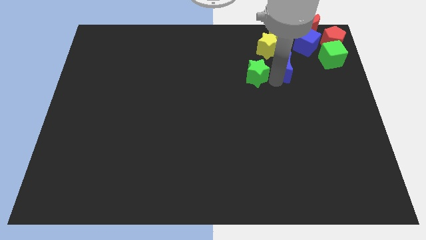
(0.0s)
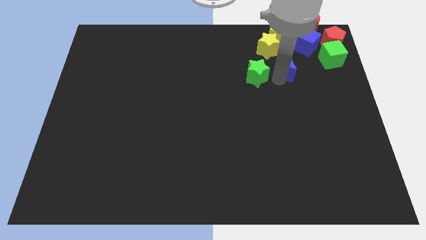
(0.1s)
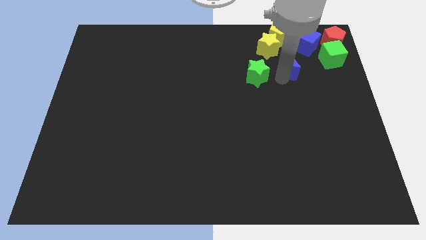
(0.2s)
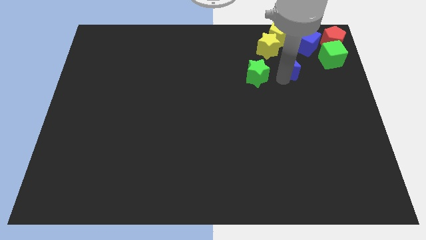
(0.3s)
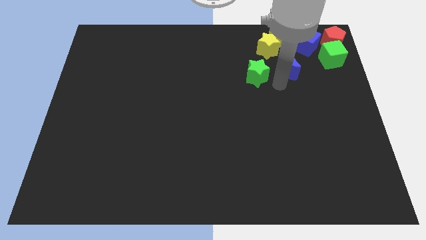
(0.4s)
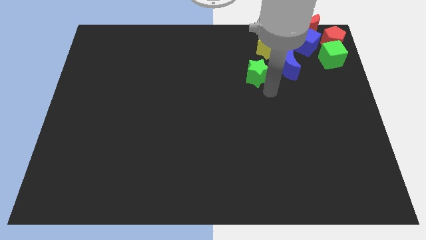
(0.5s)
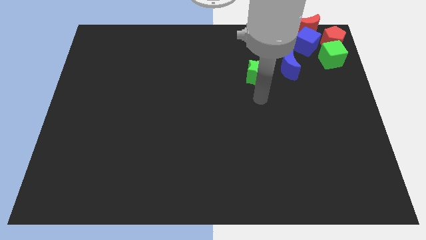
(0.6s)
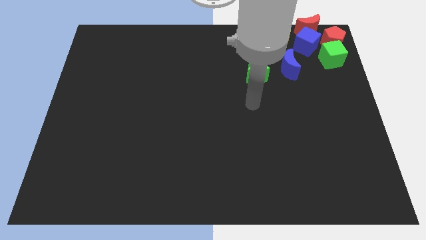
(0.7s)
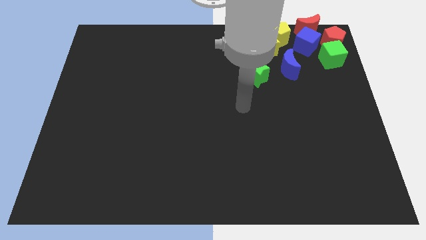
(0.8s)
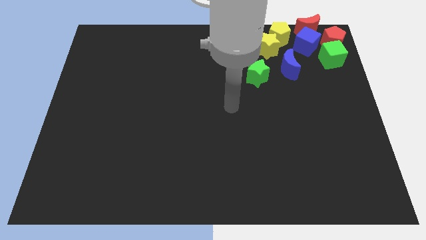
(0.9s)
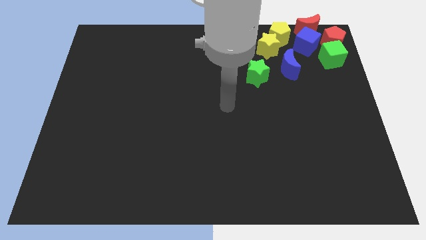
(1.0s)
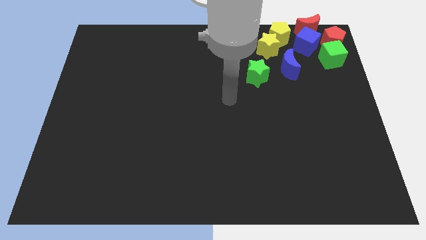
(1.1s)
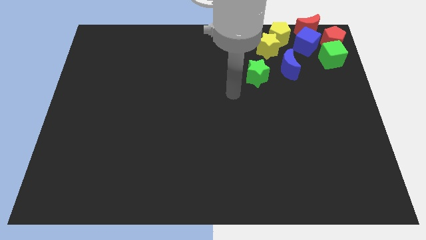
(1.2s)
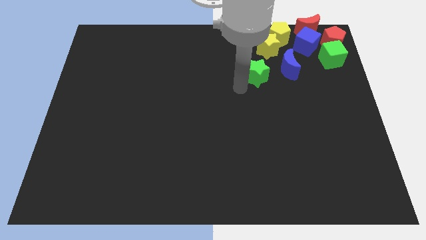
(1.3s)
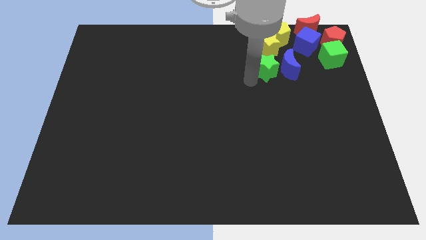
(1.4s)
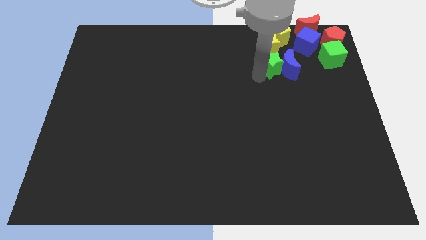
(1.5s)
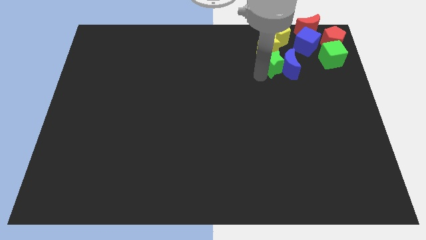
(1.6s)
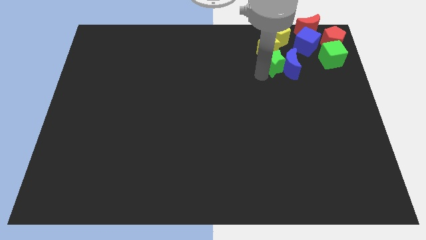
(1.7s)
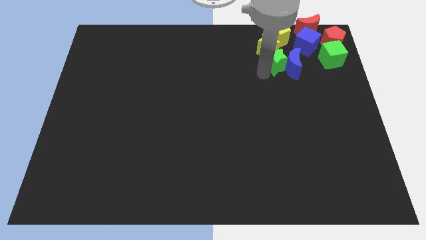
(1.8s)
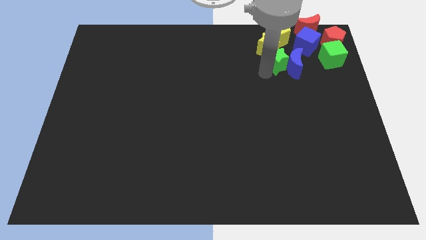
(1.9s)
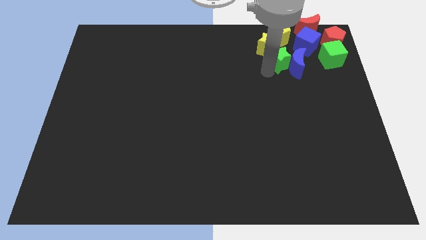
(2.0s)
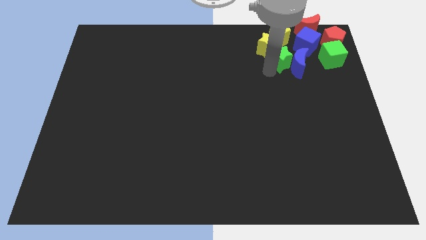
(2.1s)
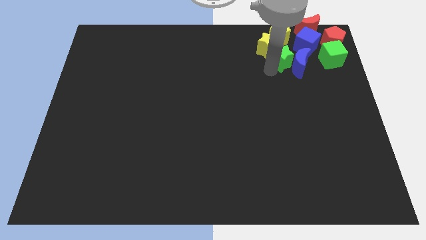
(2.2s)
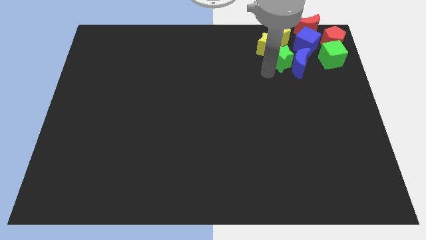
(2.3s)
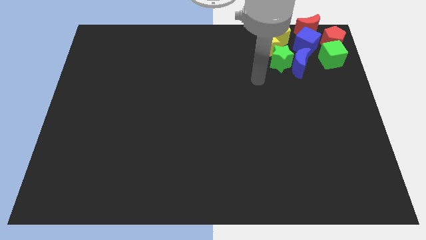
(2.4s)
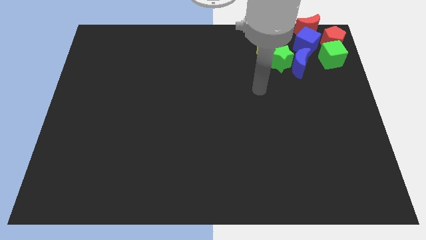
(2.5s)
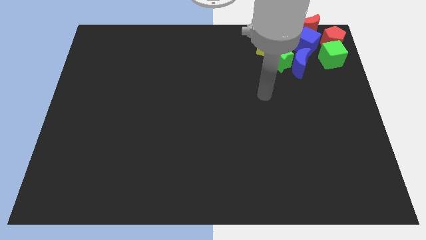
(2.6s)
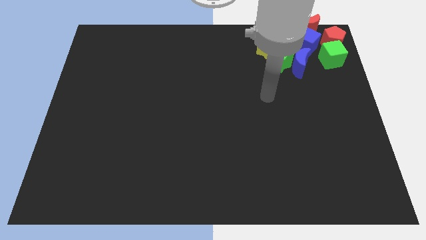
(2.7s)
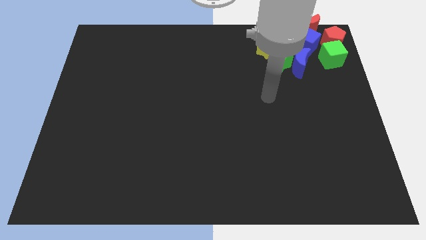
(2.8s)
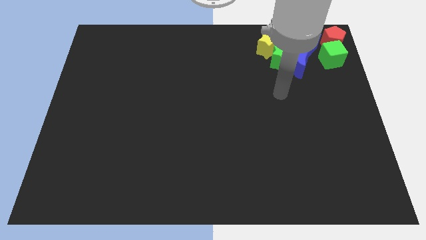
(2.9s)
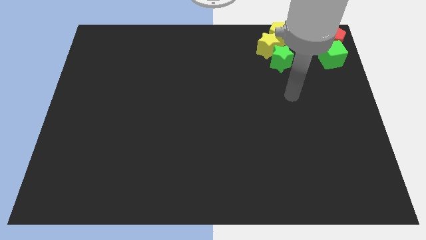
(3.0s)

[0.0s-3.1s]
move the blue crescent and the green star to the group of blocks

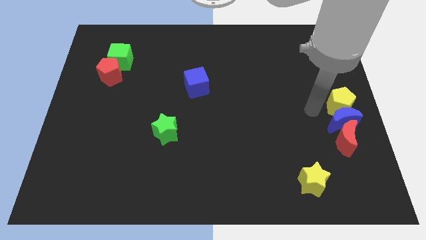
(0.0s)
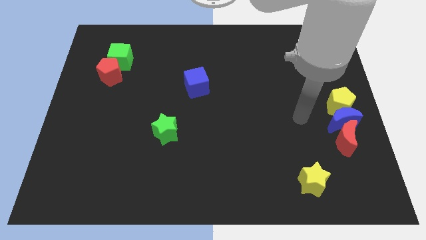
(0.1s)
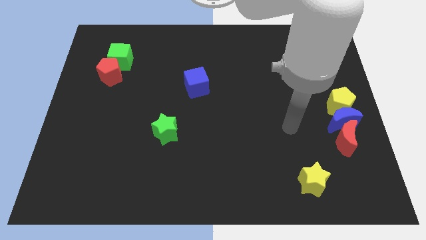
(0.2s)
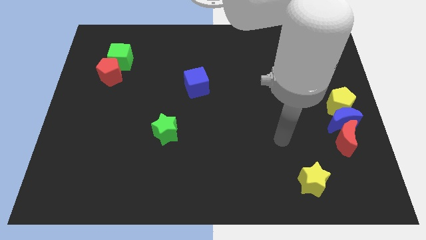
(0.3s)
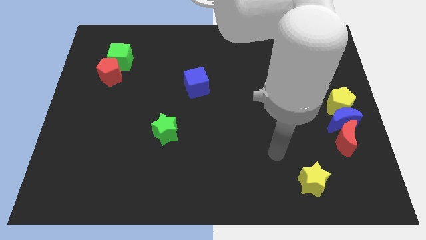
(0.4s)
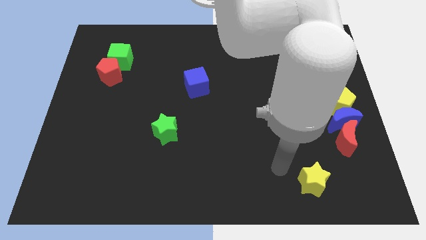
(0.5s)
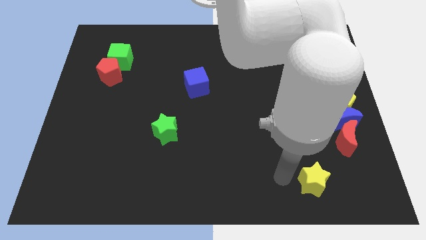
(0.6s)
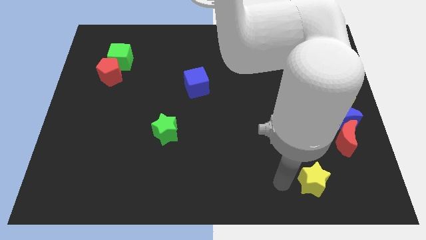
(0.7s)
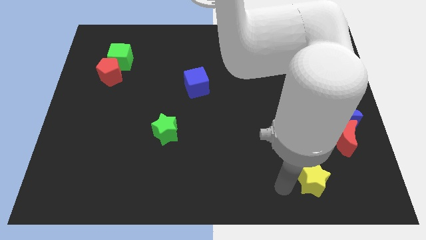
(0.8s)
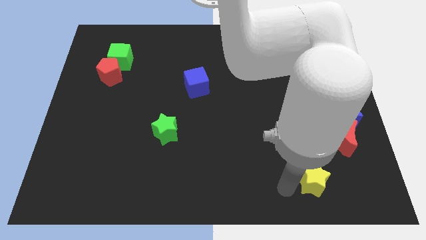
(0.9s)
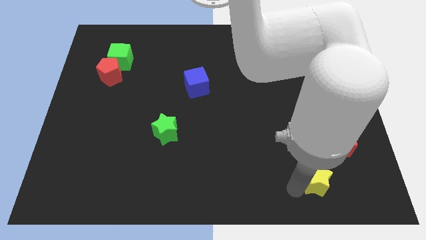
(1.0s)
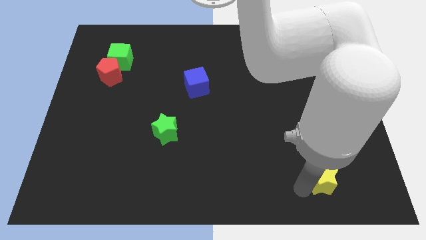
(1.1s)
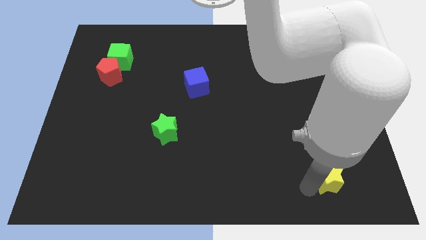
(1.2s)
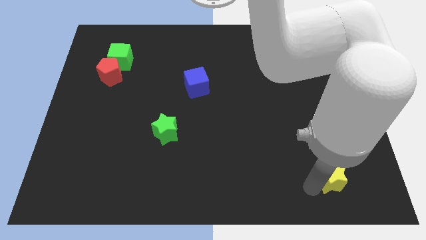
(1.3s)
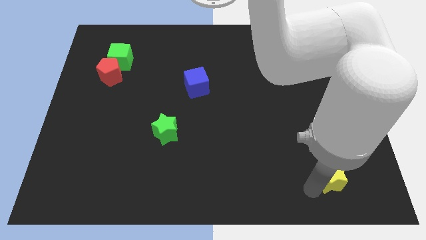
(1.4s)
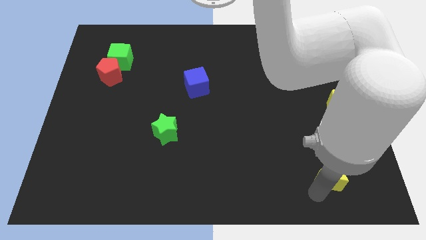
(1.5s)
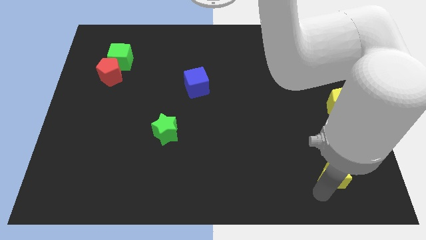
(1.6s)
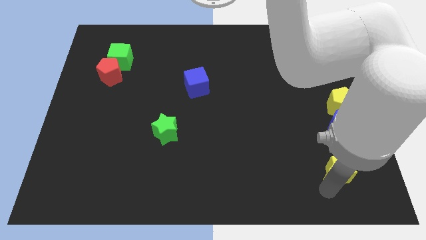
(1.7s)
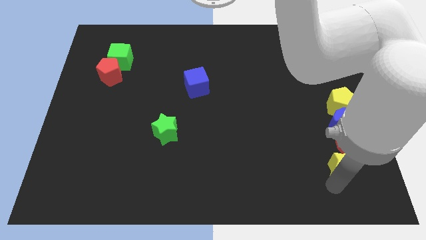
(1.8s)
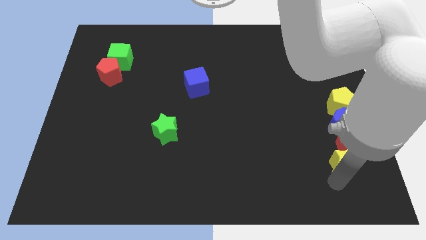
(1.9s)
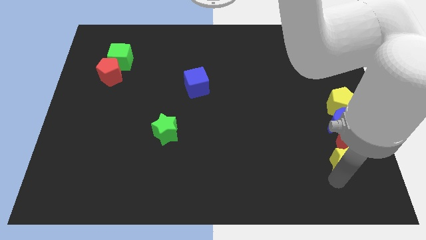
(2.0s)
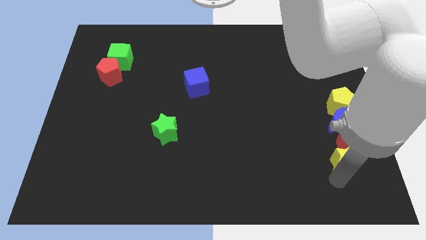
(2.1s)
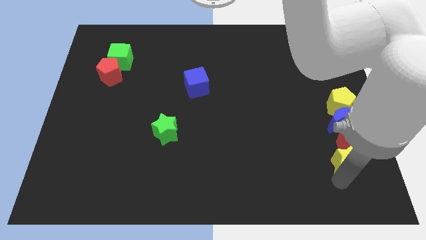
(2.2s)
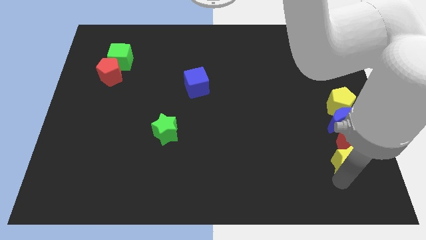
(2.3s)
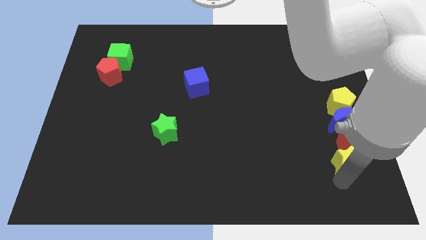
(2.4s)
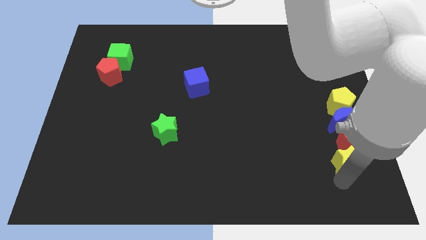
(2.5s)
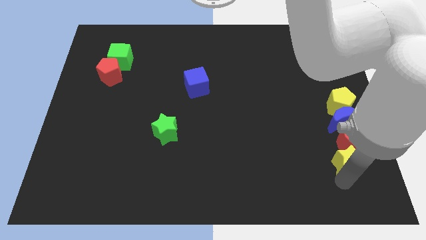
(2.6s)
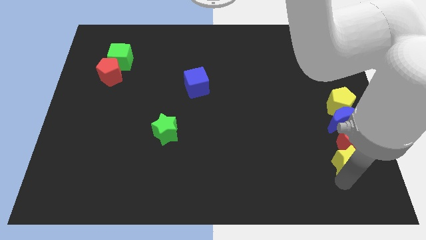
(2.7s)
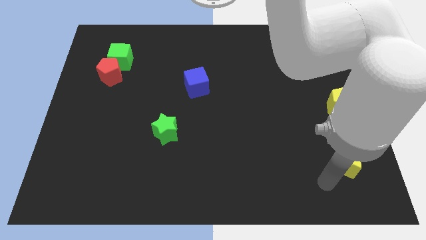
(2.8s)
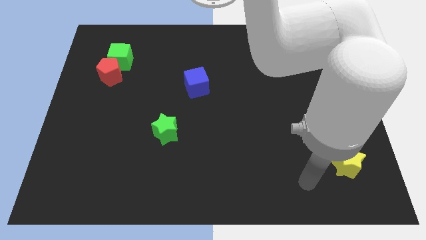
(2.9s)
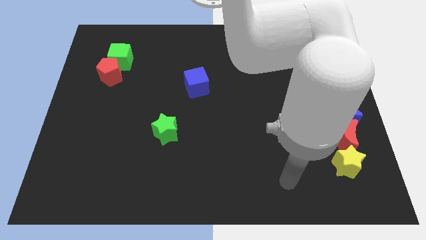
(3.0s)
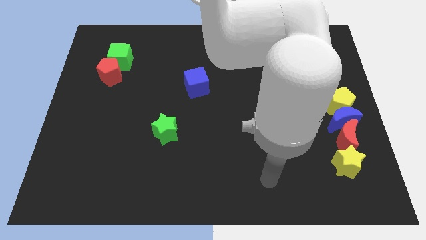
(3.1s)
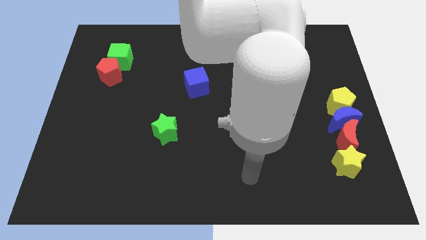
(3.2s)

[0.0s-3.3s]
place the yellow star below the red crescent

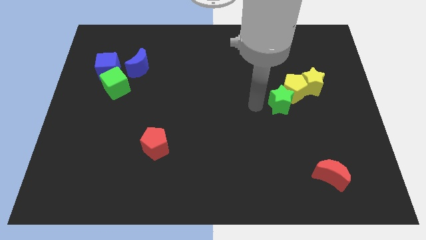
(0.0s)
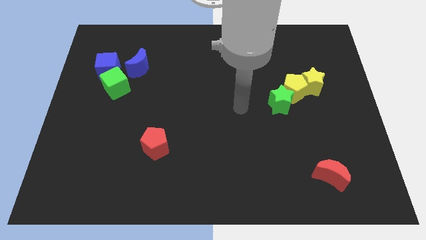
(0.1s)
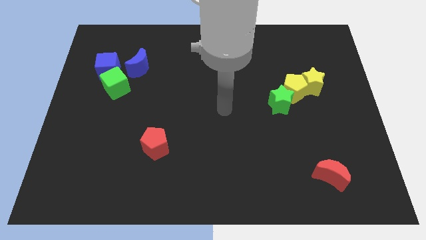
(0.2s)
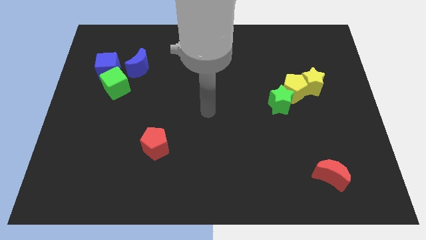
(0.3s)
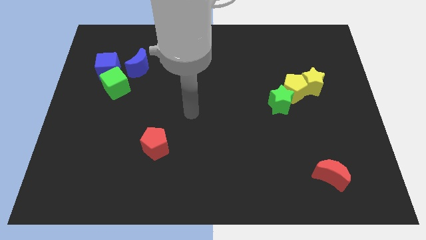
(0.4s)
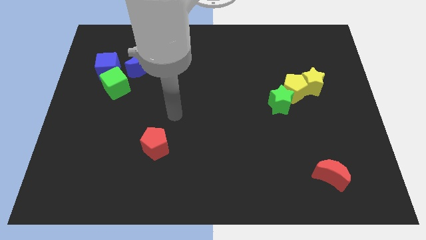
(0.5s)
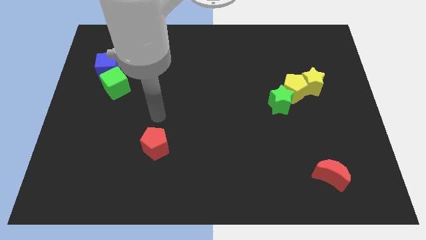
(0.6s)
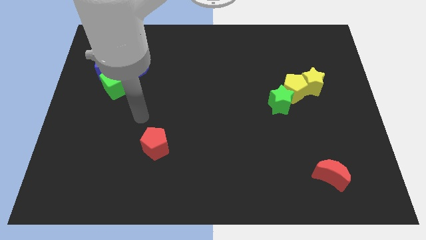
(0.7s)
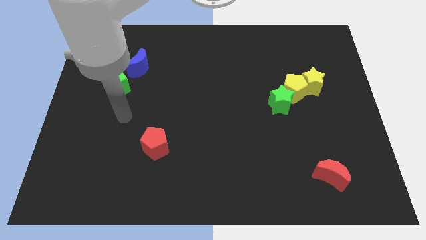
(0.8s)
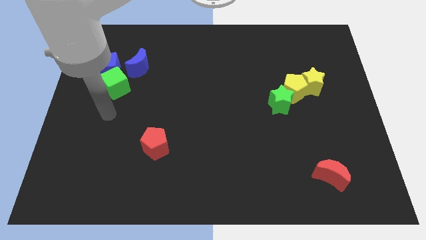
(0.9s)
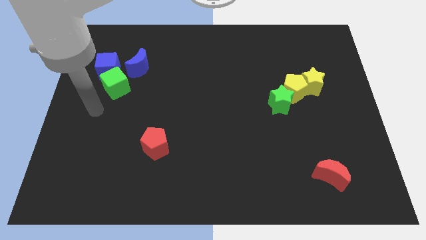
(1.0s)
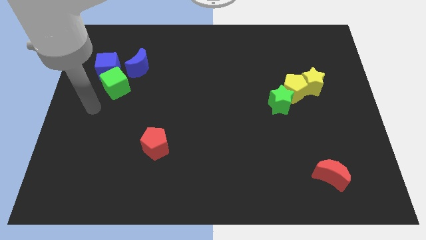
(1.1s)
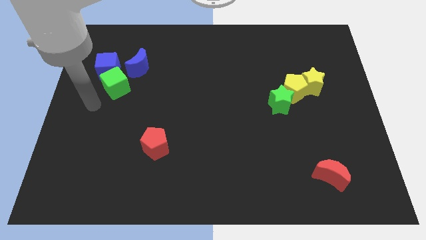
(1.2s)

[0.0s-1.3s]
take the arm towards the left of the green cube

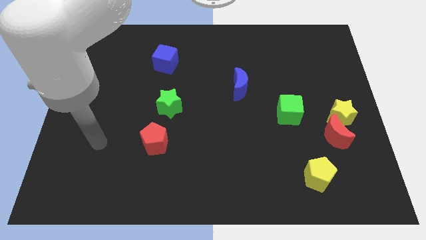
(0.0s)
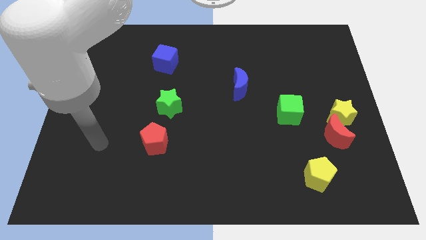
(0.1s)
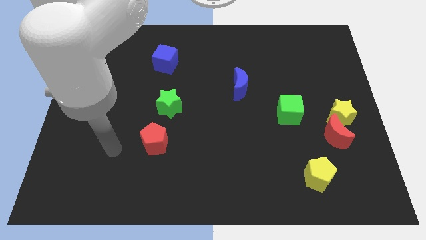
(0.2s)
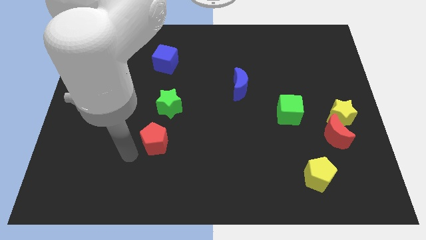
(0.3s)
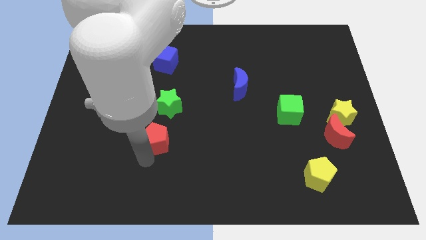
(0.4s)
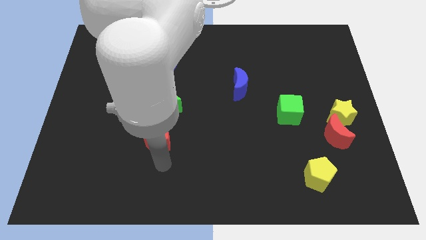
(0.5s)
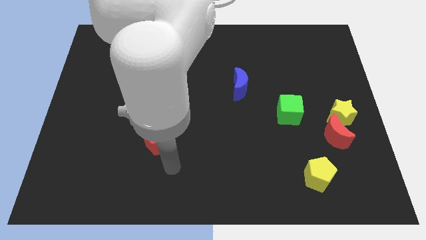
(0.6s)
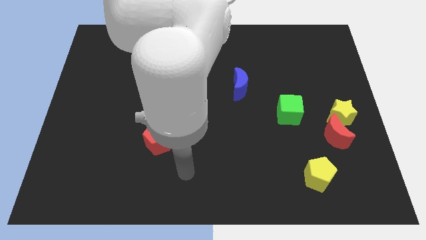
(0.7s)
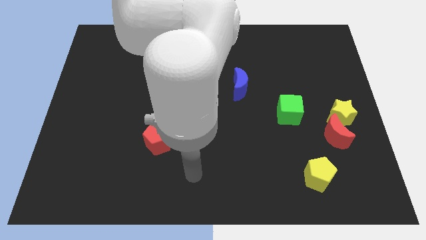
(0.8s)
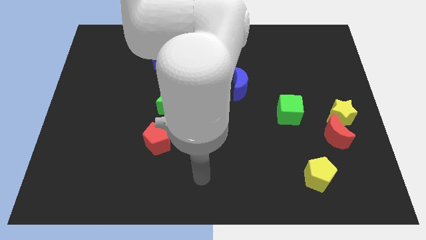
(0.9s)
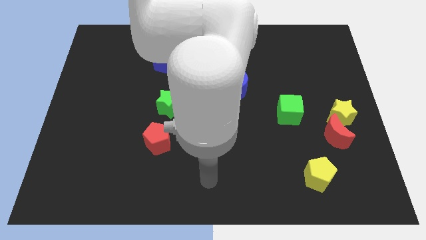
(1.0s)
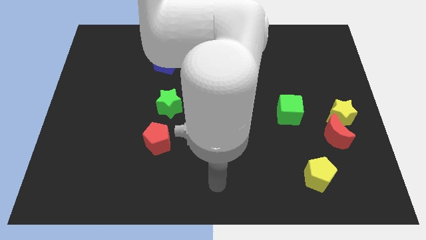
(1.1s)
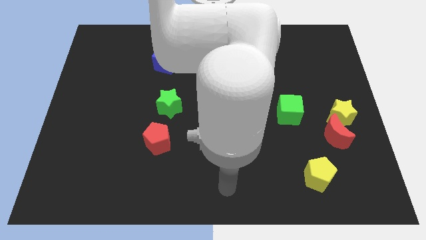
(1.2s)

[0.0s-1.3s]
move the arm towards the bottom center of the board
